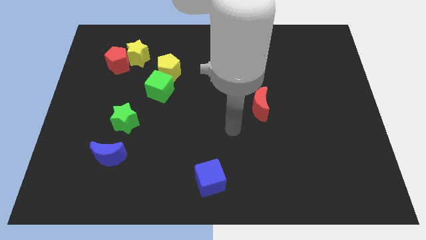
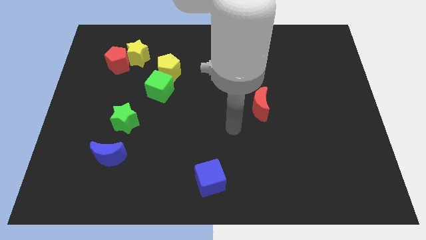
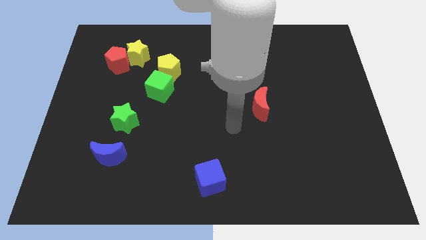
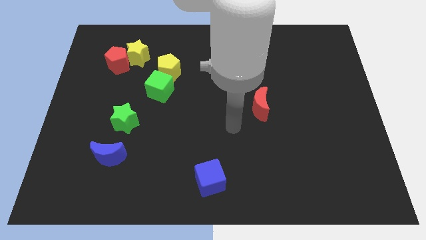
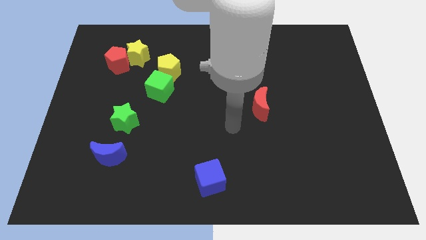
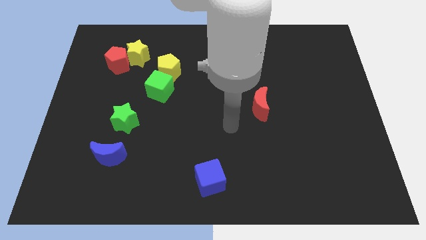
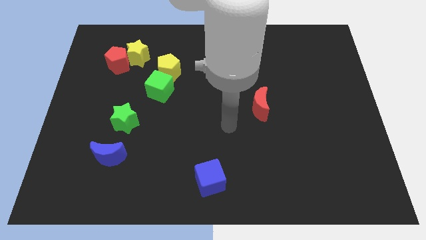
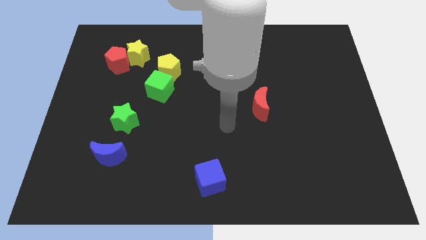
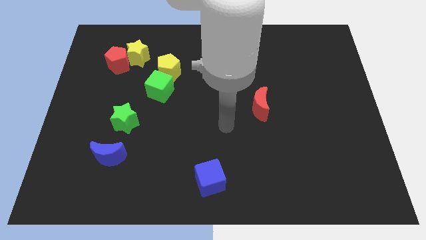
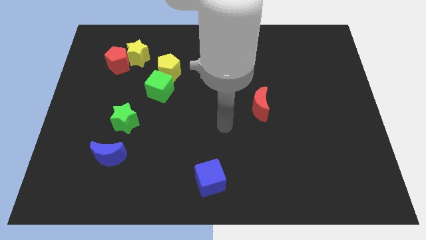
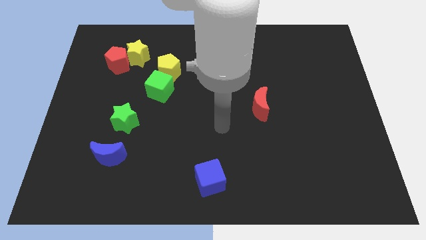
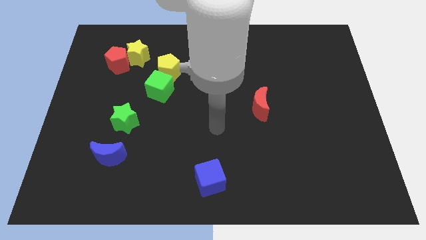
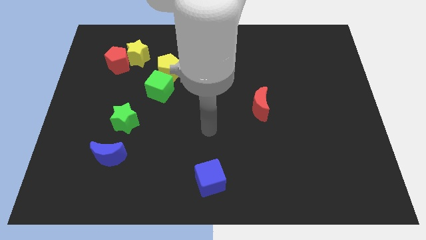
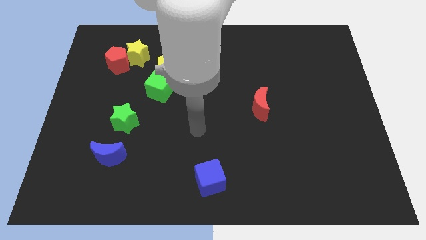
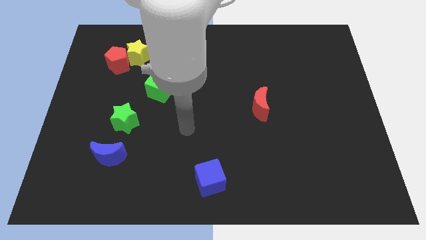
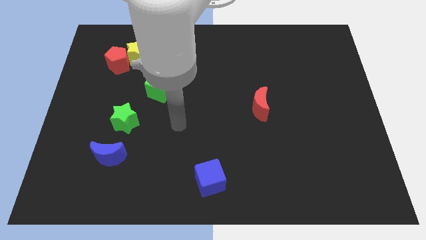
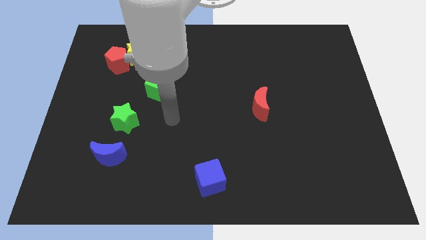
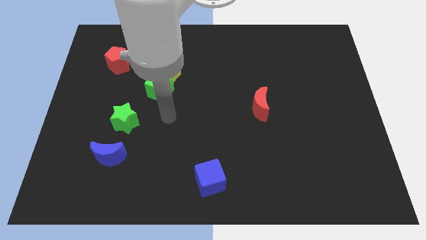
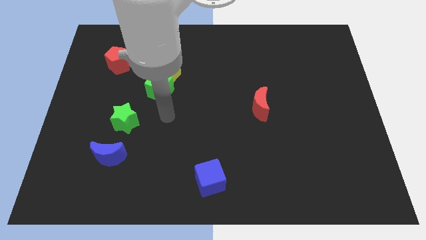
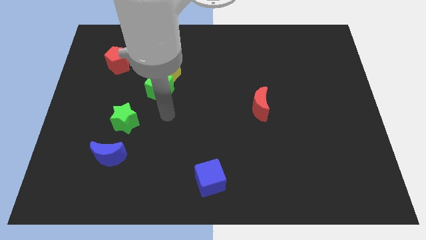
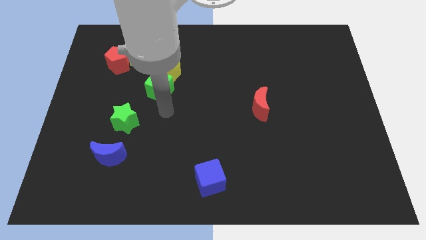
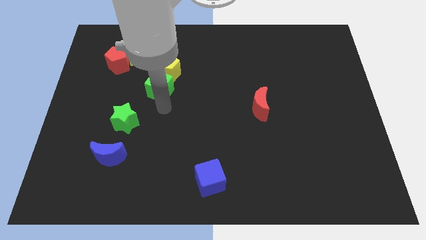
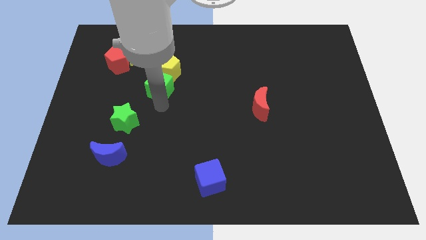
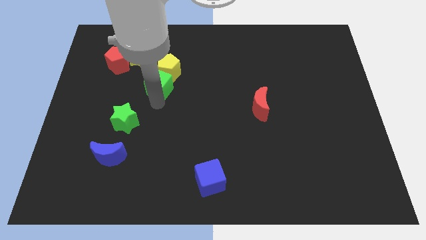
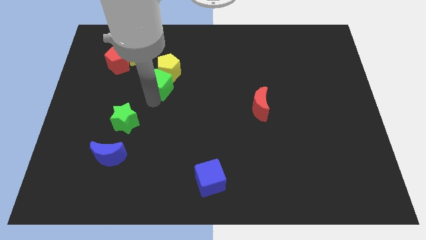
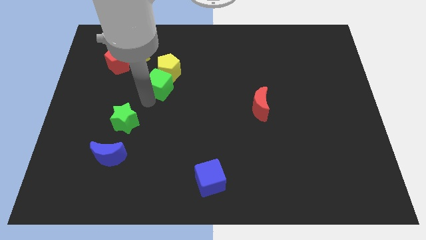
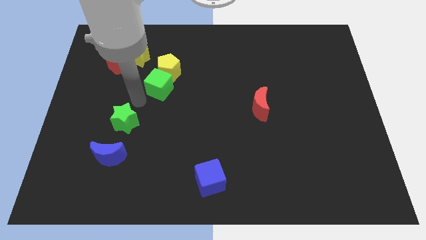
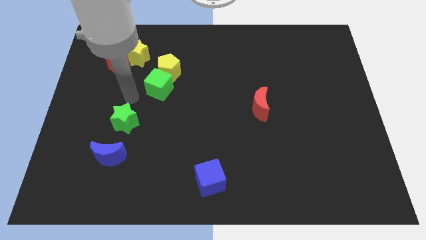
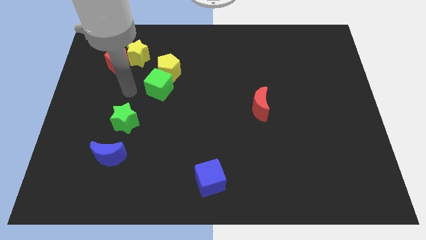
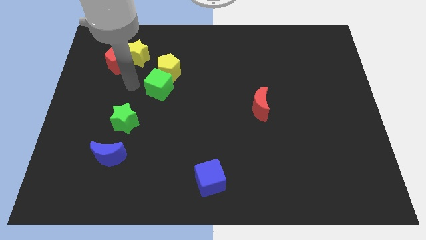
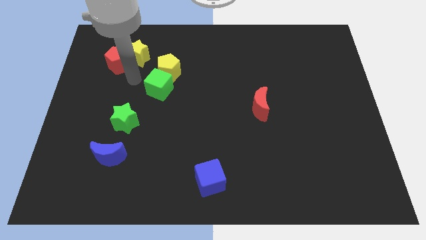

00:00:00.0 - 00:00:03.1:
place the arm between green cube and red pentagon

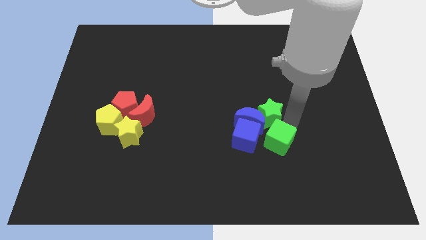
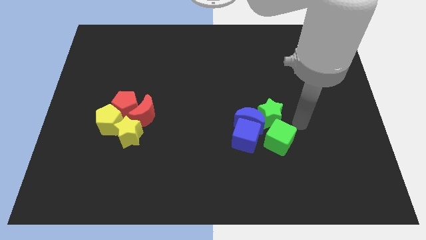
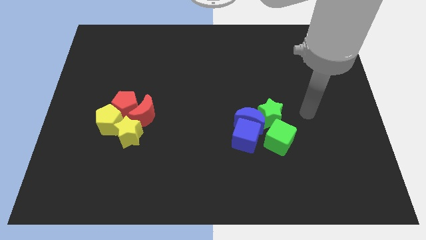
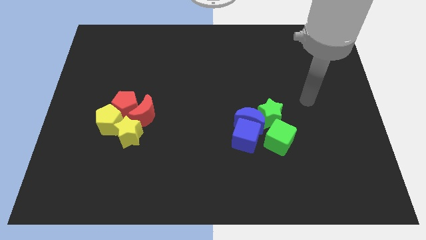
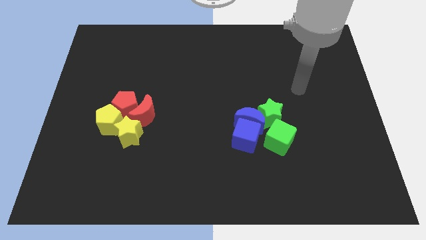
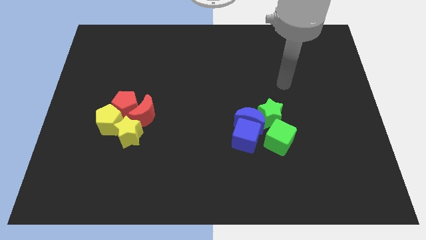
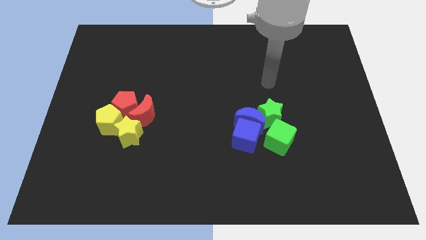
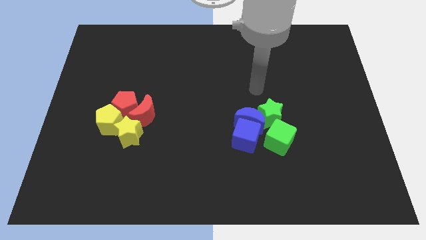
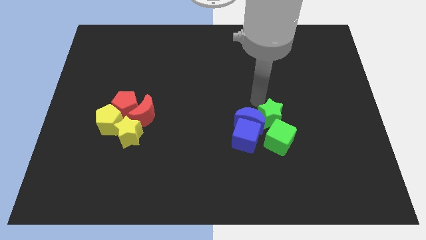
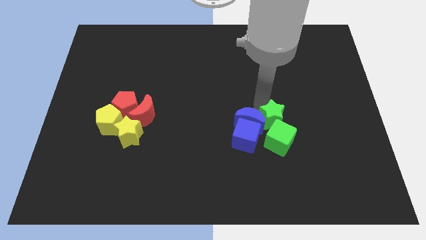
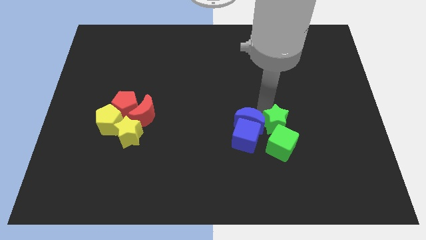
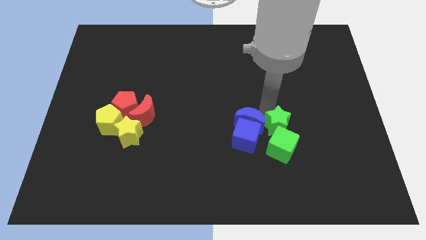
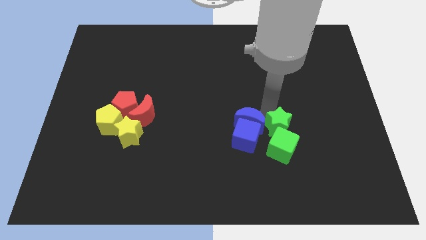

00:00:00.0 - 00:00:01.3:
move the green blocks towards the blue blocks

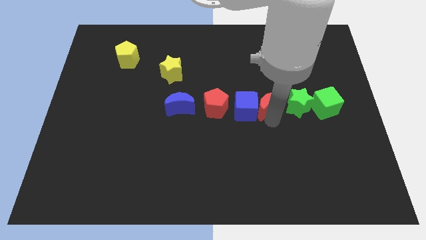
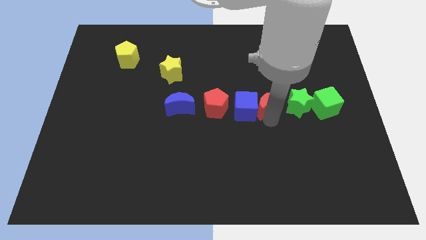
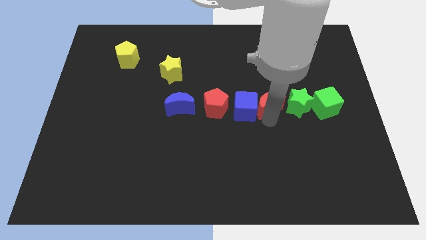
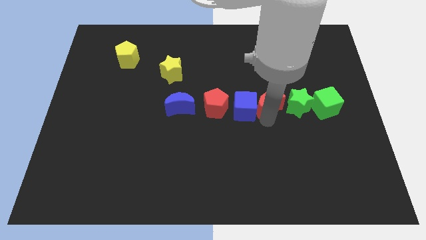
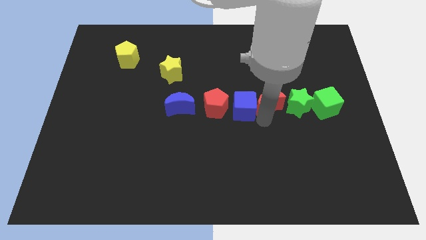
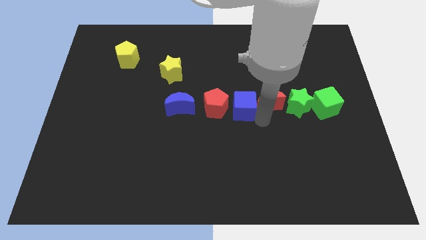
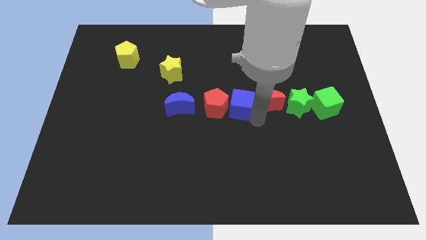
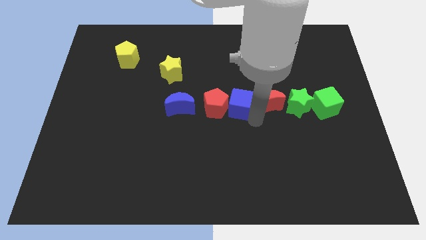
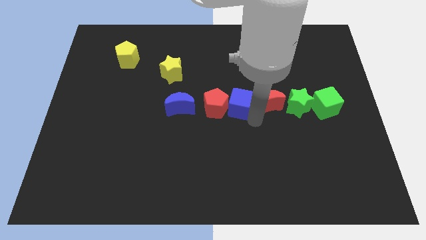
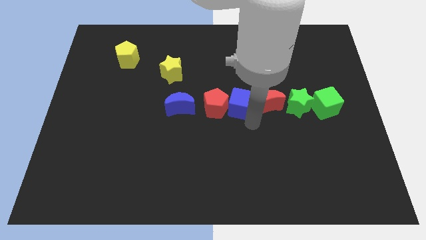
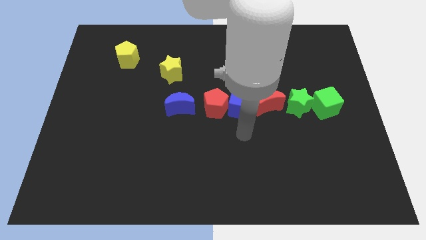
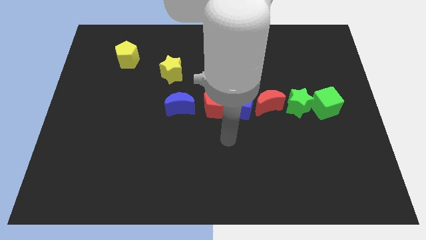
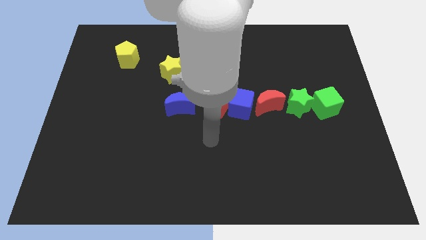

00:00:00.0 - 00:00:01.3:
place your arm below the red pentagon

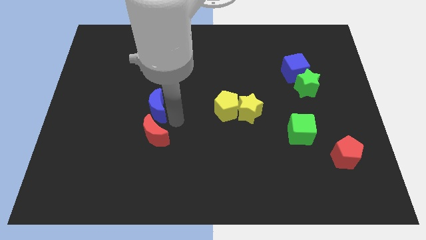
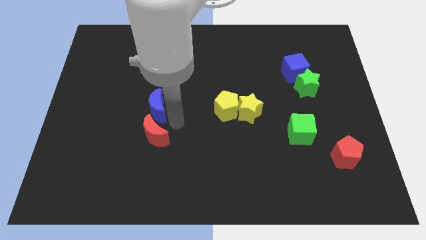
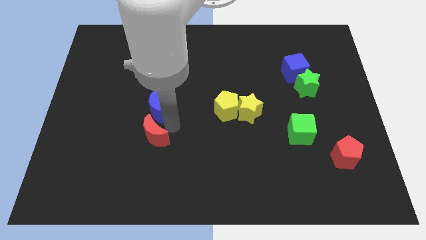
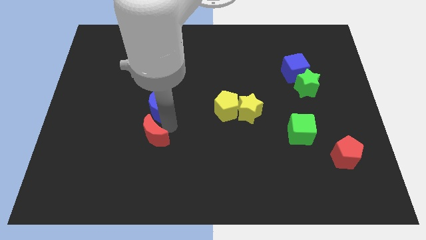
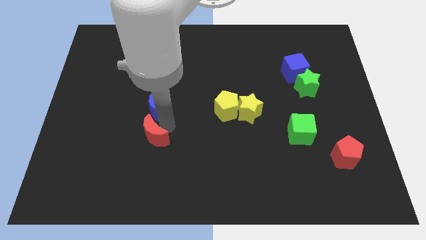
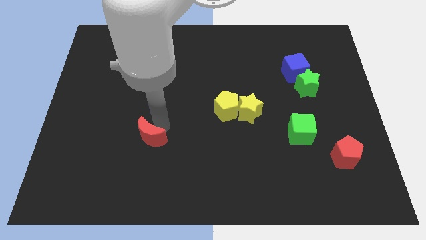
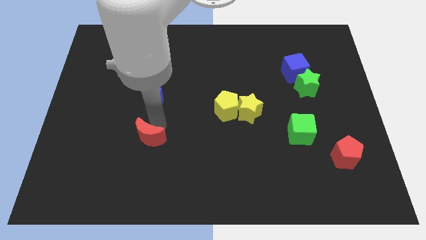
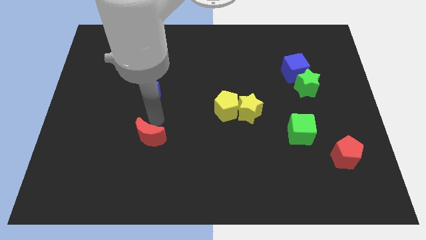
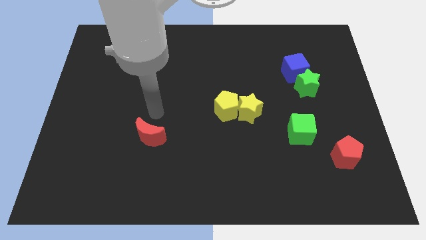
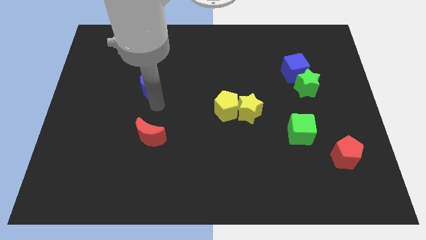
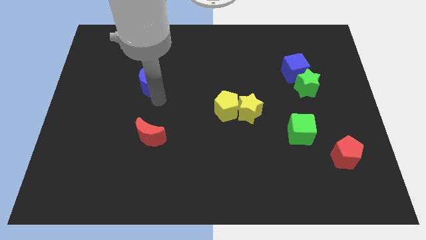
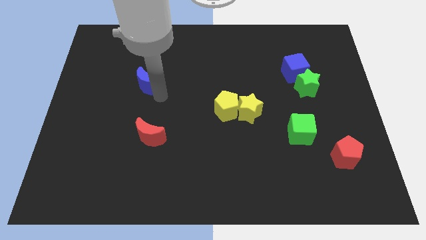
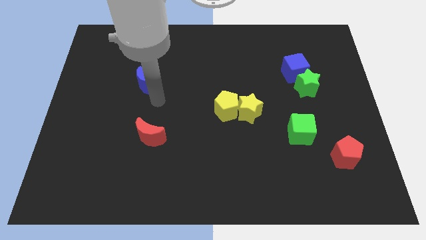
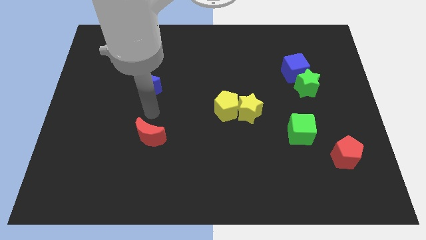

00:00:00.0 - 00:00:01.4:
separate blue crescent from red crescent

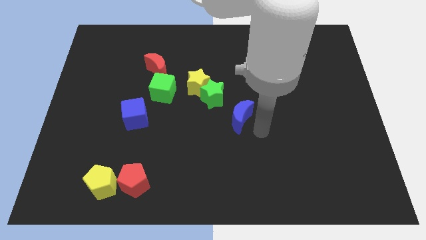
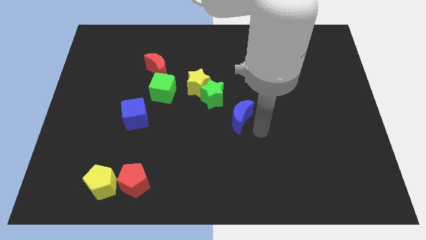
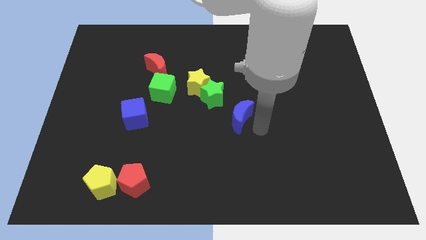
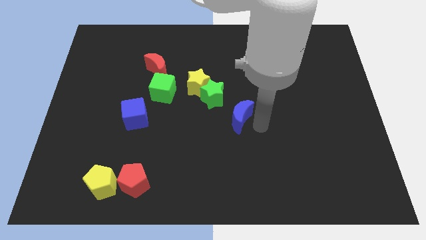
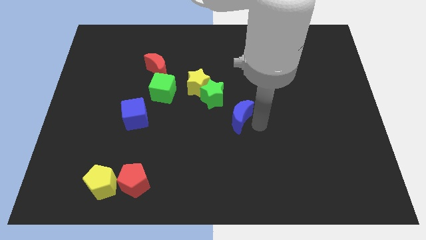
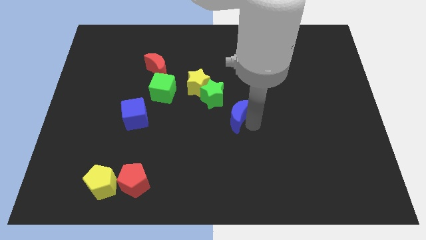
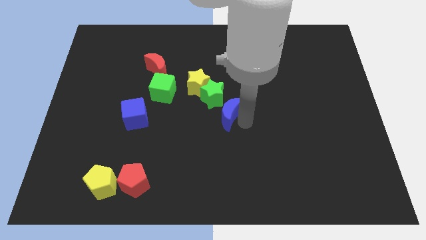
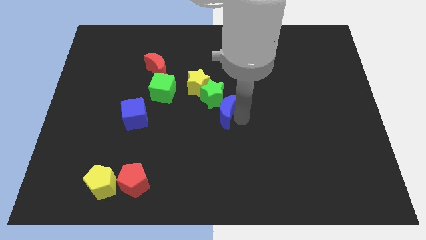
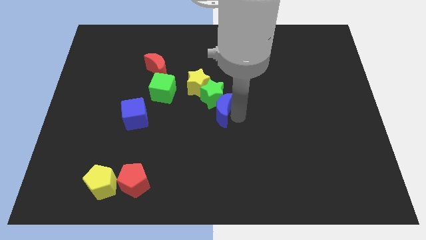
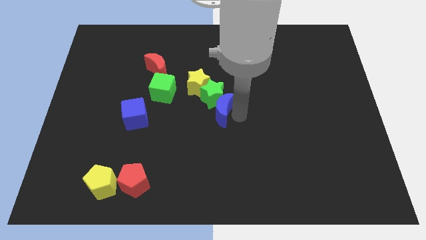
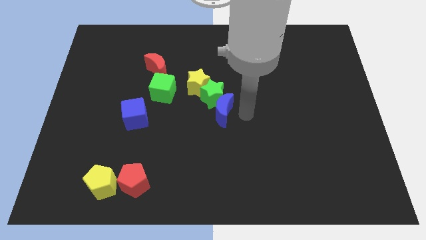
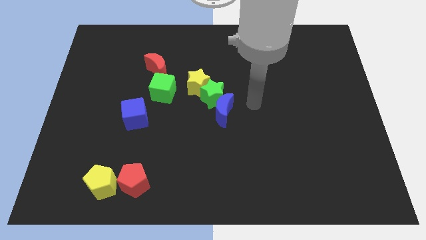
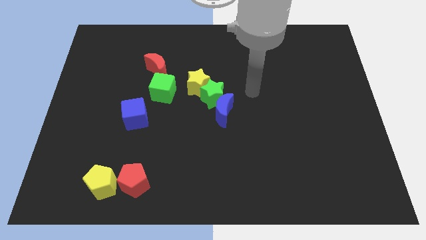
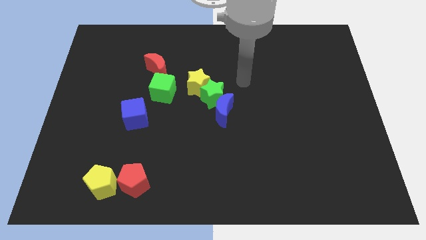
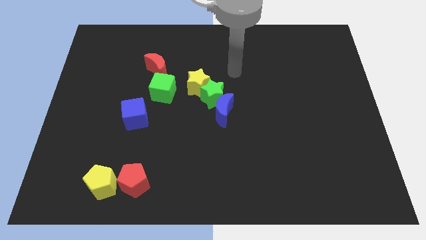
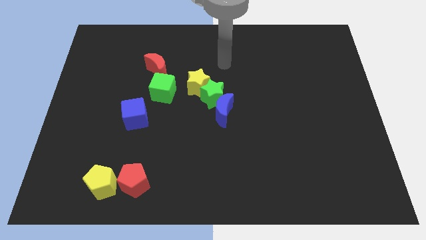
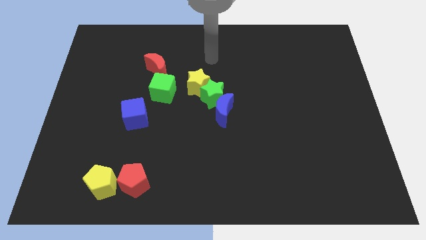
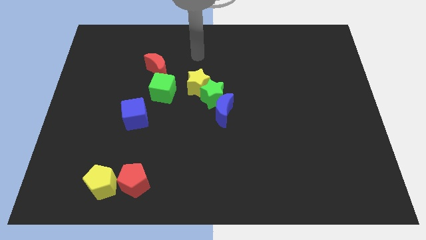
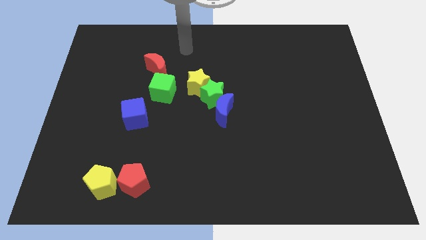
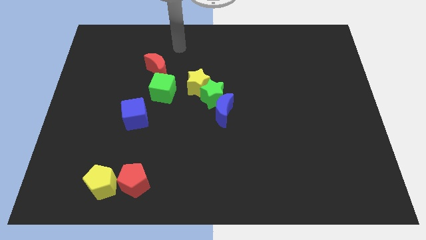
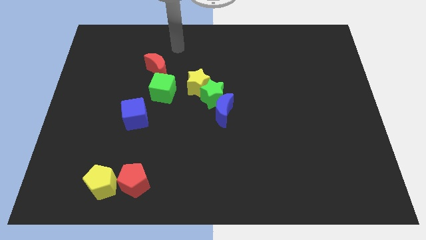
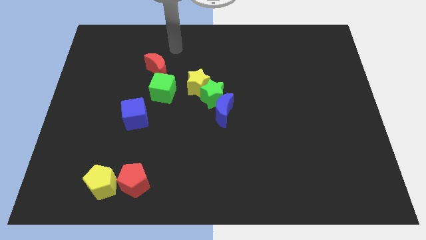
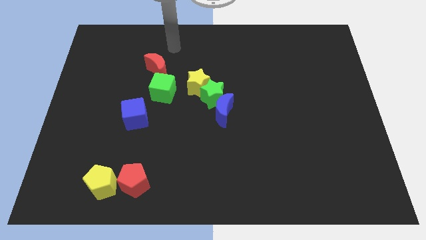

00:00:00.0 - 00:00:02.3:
push the blue crescent towards the green star and move away
